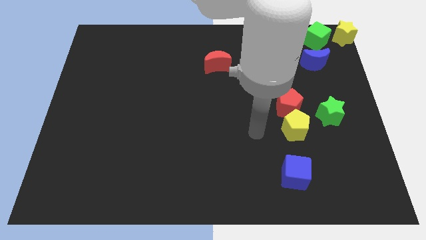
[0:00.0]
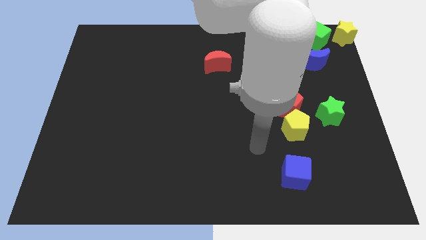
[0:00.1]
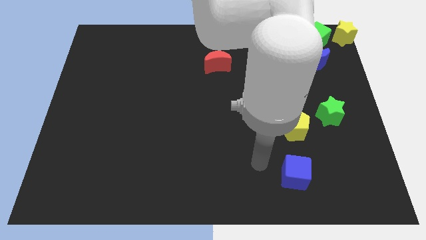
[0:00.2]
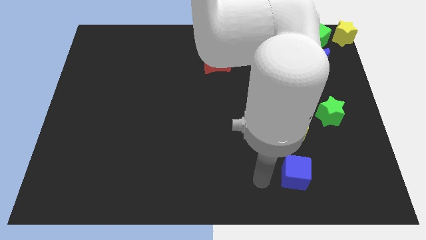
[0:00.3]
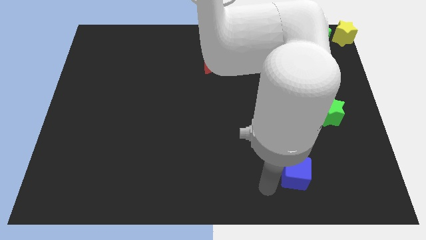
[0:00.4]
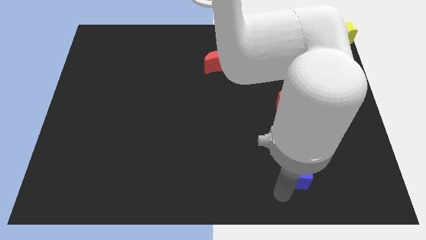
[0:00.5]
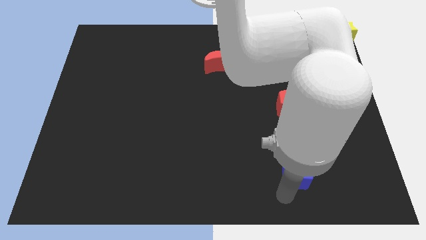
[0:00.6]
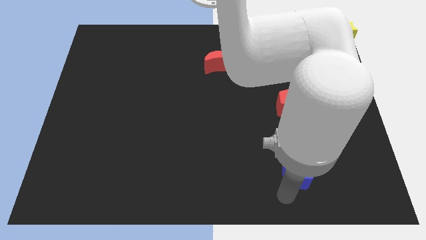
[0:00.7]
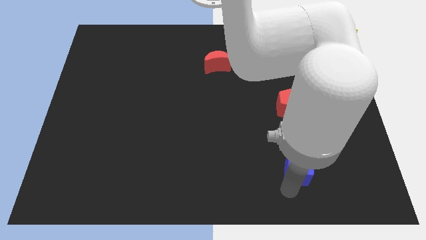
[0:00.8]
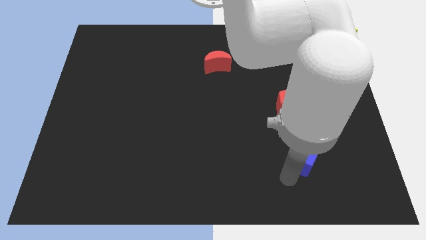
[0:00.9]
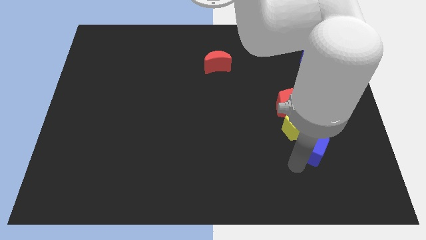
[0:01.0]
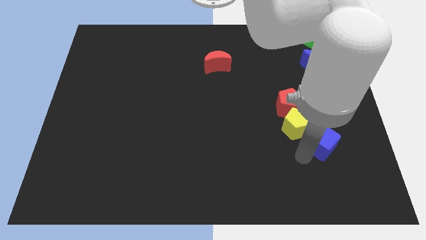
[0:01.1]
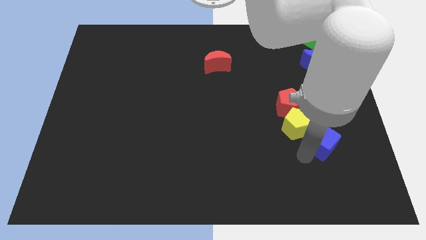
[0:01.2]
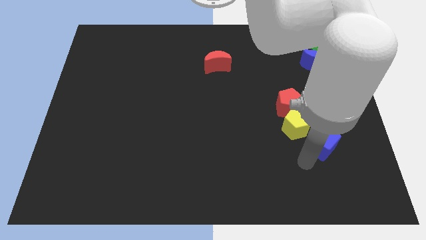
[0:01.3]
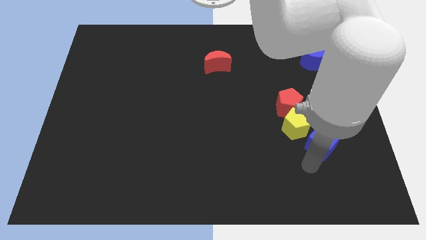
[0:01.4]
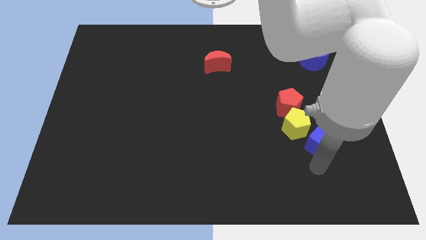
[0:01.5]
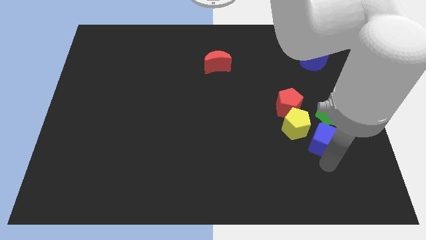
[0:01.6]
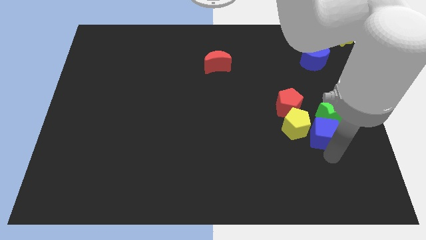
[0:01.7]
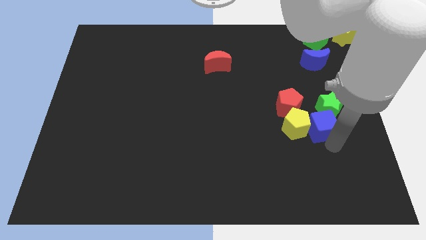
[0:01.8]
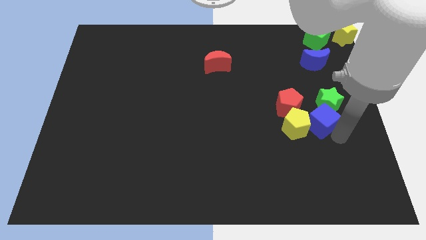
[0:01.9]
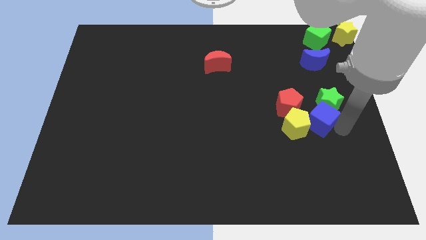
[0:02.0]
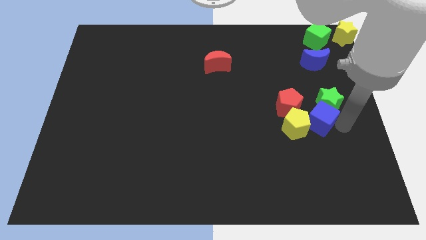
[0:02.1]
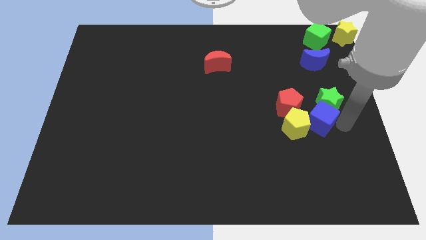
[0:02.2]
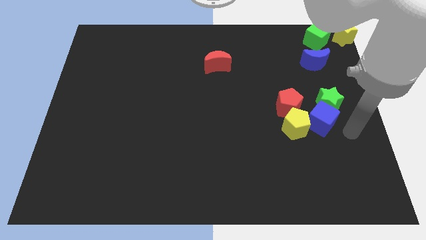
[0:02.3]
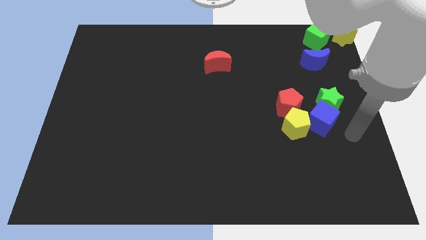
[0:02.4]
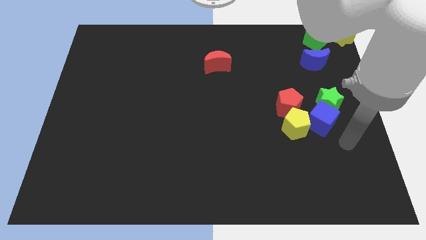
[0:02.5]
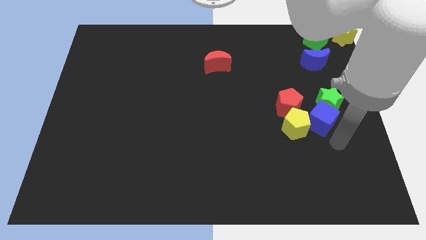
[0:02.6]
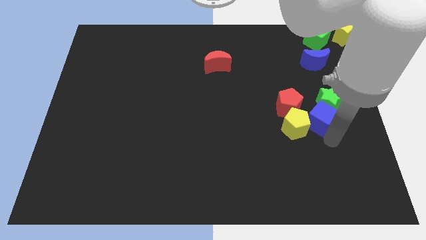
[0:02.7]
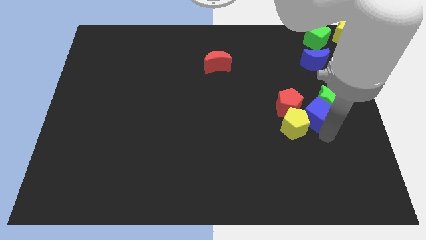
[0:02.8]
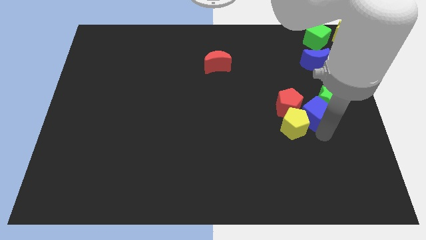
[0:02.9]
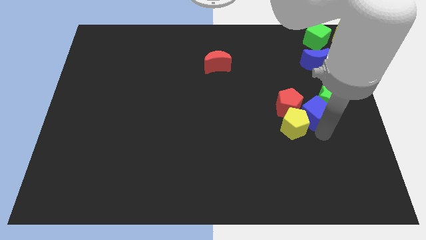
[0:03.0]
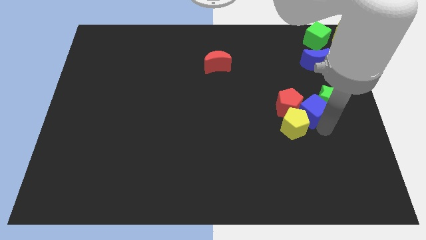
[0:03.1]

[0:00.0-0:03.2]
push blue cube slightly into green star

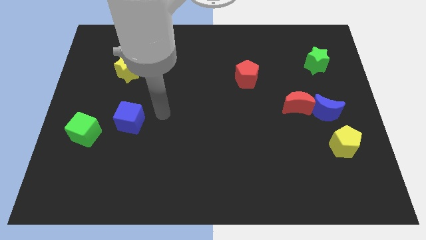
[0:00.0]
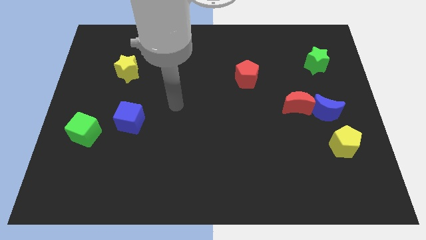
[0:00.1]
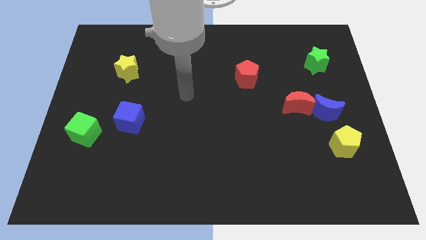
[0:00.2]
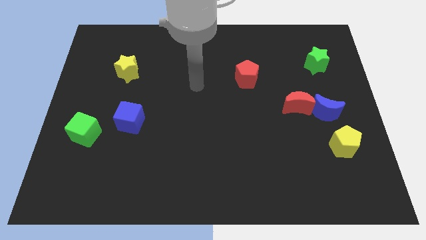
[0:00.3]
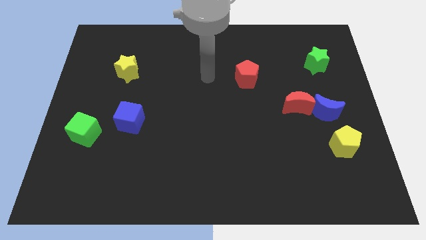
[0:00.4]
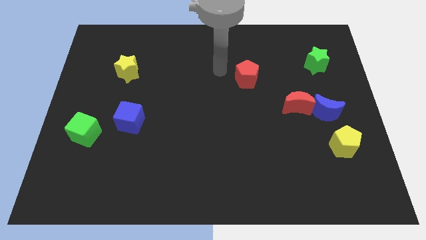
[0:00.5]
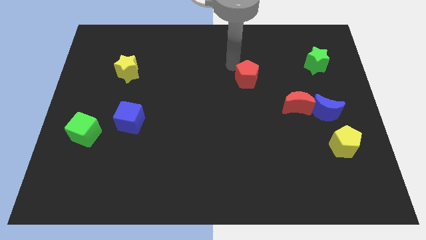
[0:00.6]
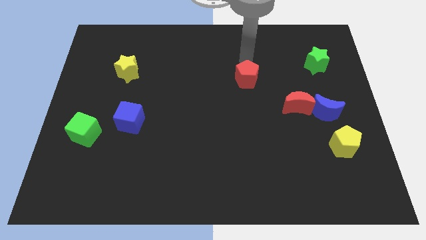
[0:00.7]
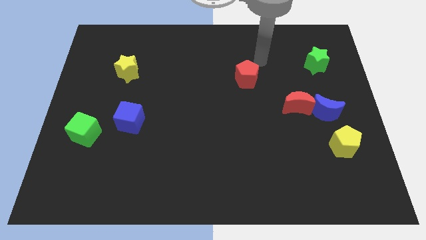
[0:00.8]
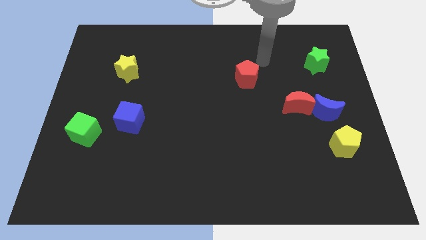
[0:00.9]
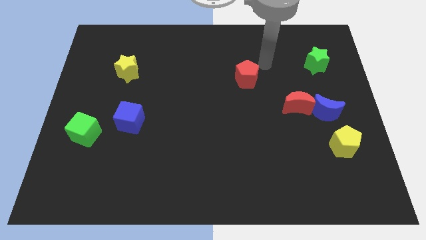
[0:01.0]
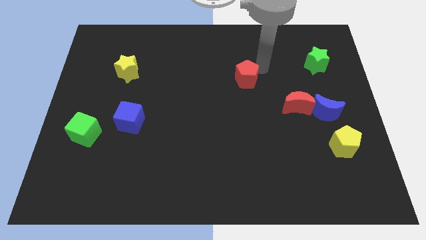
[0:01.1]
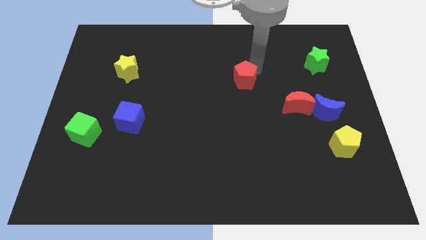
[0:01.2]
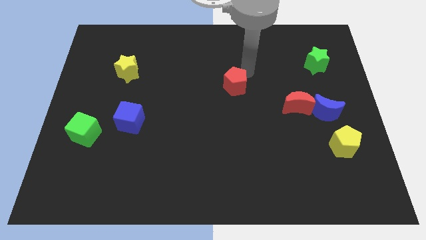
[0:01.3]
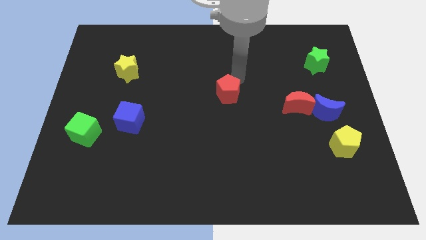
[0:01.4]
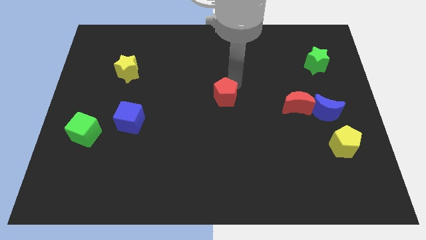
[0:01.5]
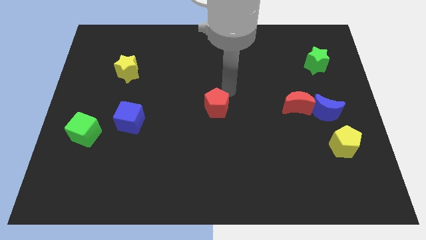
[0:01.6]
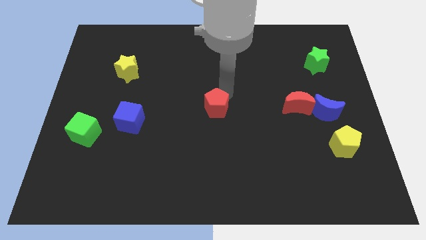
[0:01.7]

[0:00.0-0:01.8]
move the red pentagon to the left of the red crescent

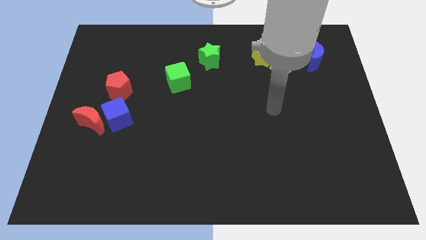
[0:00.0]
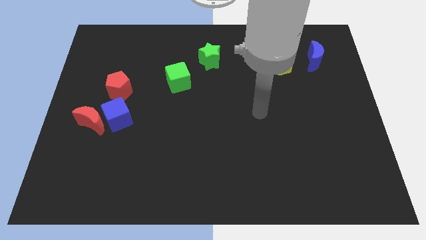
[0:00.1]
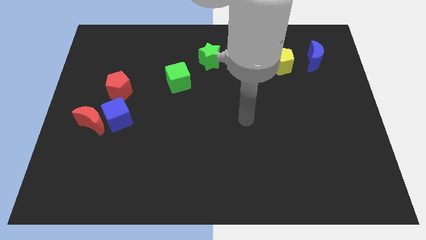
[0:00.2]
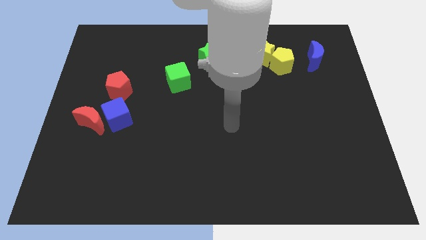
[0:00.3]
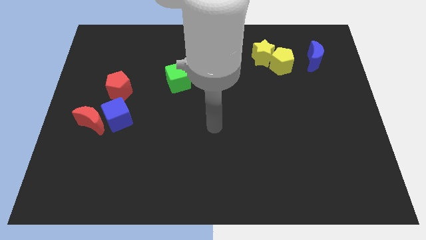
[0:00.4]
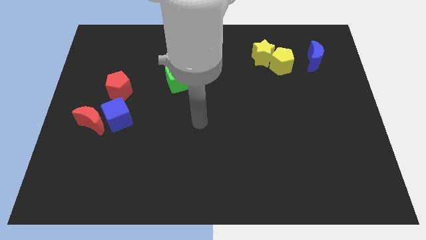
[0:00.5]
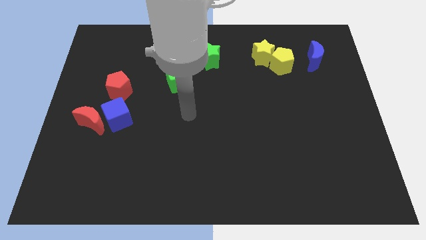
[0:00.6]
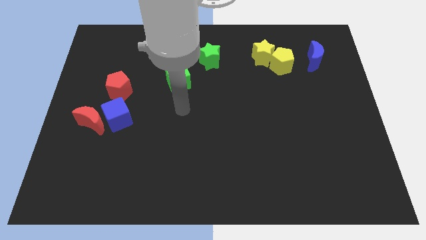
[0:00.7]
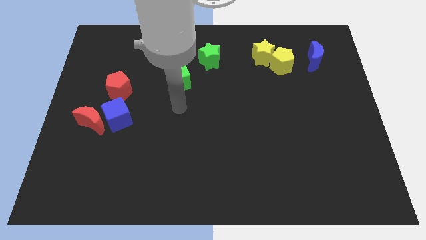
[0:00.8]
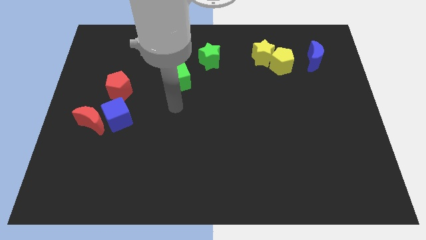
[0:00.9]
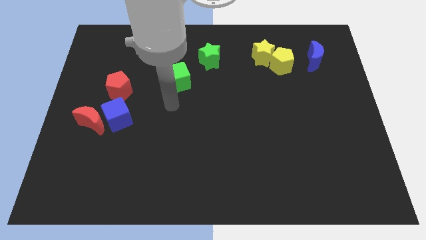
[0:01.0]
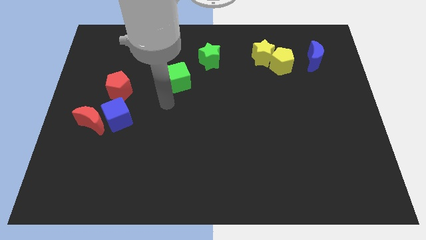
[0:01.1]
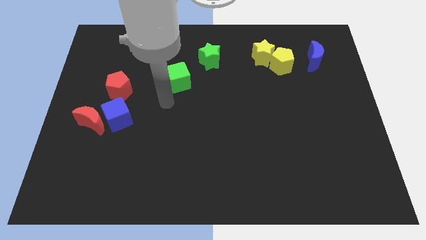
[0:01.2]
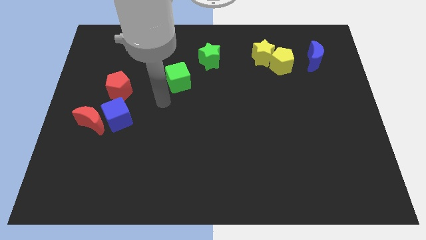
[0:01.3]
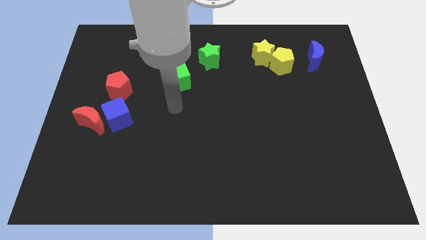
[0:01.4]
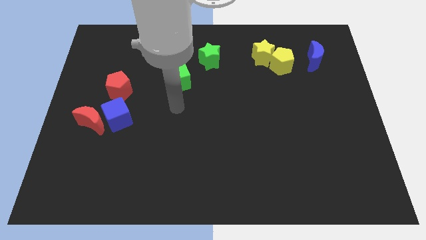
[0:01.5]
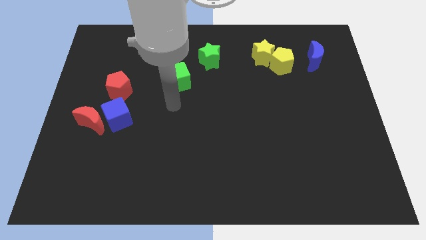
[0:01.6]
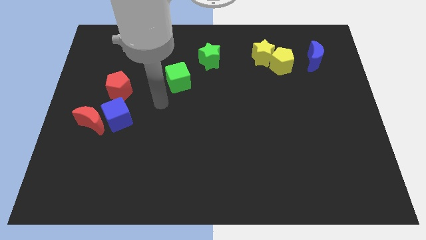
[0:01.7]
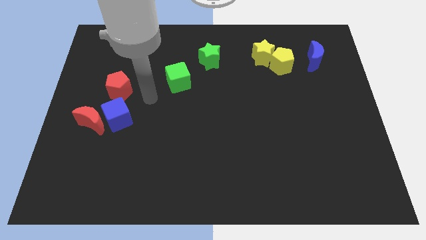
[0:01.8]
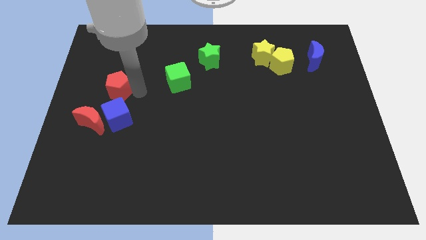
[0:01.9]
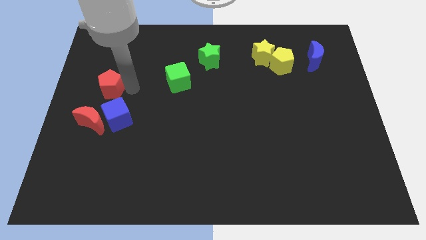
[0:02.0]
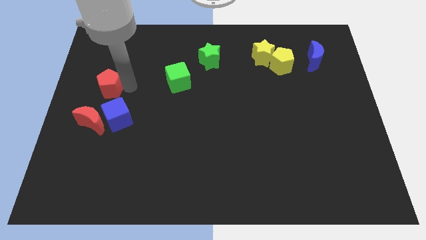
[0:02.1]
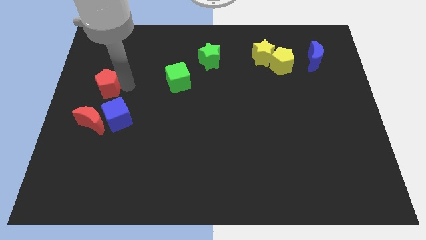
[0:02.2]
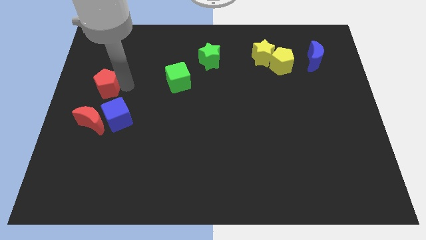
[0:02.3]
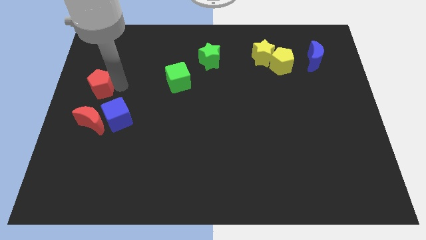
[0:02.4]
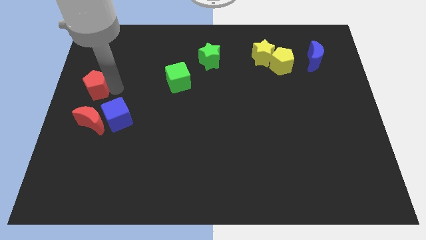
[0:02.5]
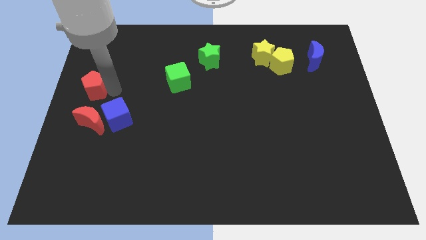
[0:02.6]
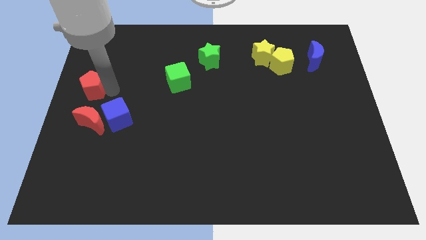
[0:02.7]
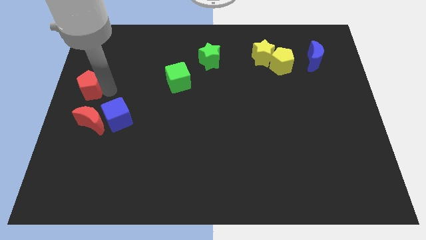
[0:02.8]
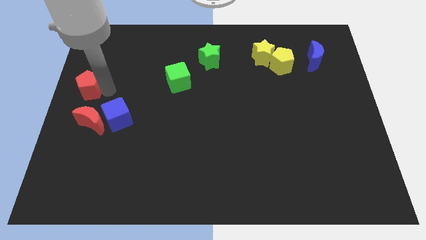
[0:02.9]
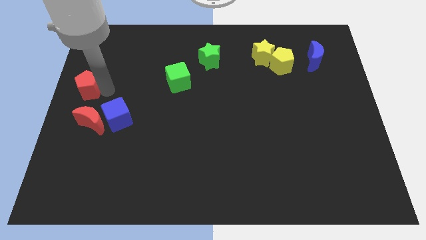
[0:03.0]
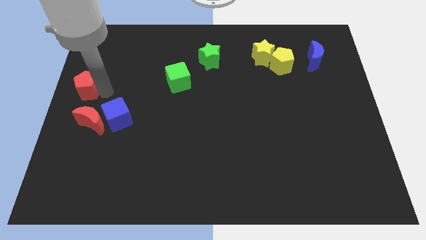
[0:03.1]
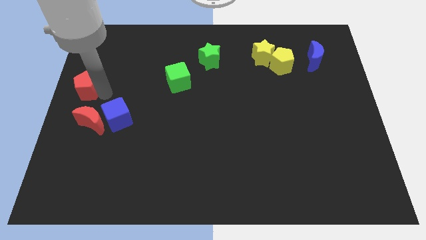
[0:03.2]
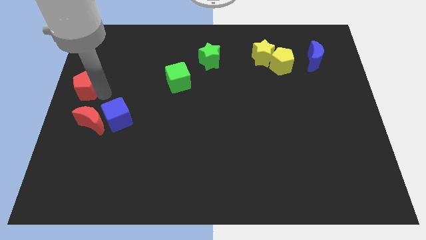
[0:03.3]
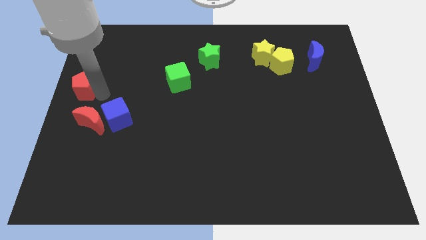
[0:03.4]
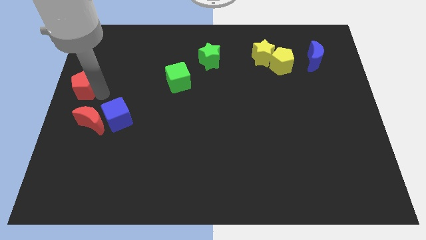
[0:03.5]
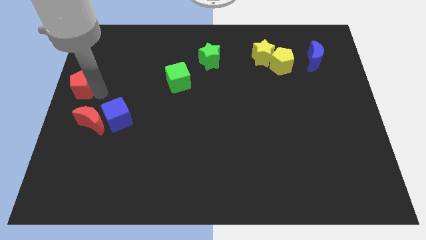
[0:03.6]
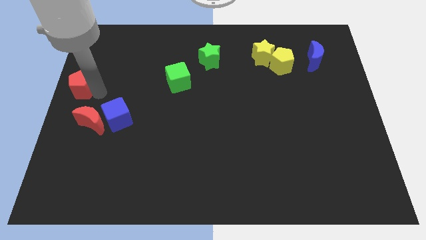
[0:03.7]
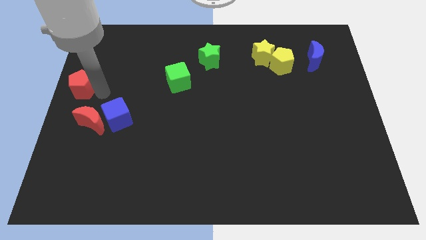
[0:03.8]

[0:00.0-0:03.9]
move the red pentagon to the left center of the board

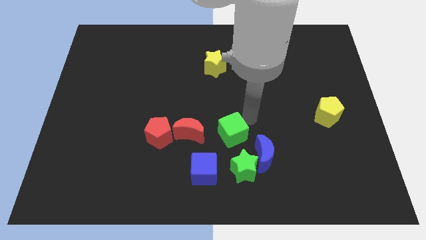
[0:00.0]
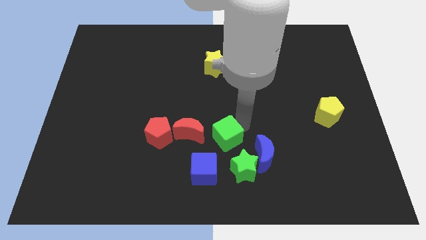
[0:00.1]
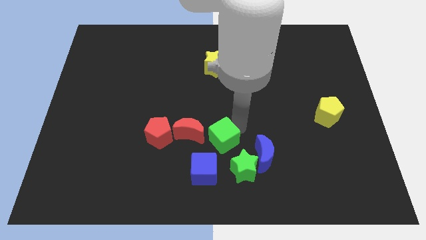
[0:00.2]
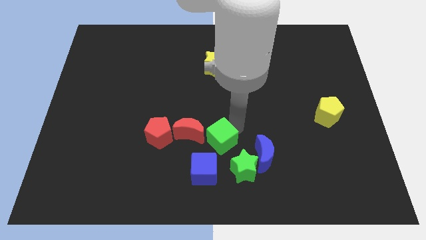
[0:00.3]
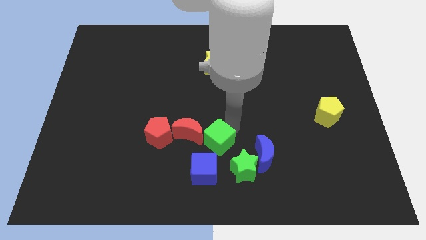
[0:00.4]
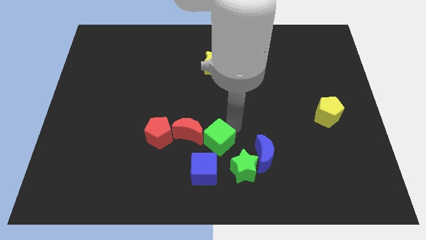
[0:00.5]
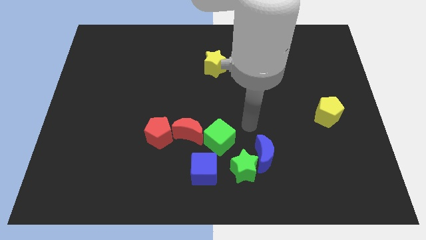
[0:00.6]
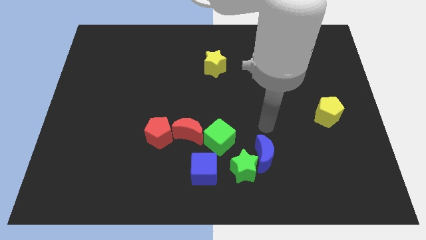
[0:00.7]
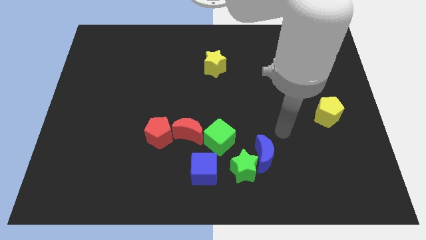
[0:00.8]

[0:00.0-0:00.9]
slide the green cube in to red moon
